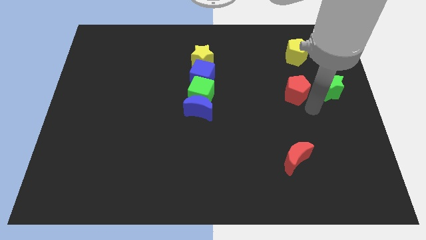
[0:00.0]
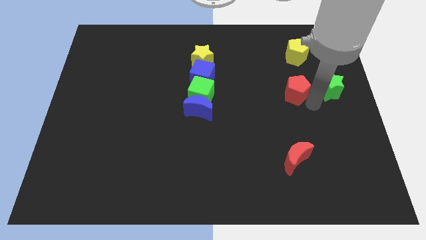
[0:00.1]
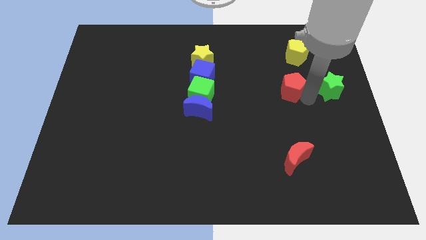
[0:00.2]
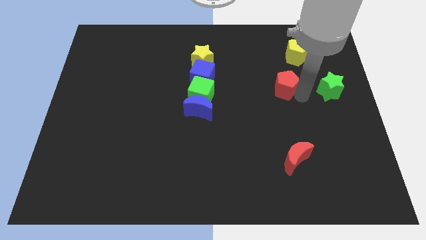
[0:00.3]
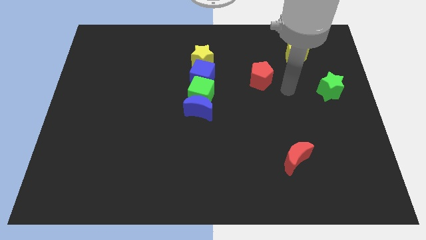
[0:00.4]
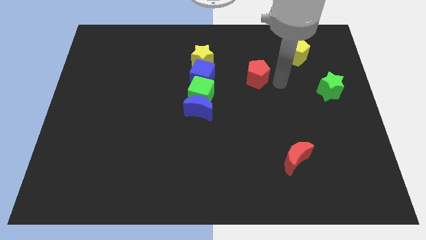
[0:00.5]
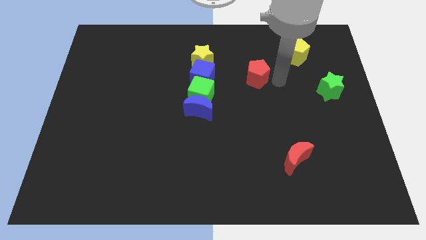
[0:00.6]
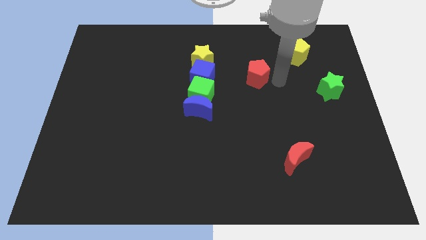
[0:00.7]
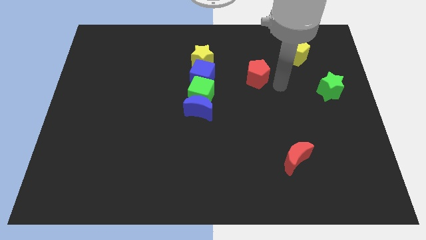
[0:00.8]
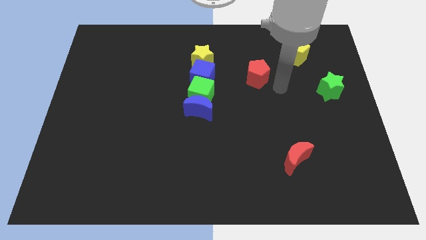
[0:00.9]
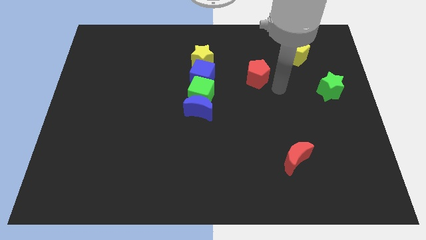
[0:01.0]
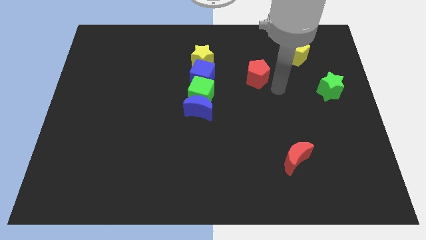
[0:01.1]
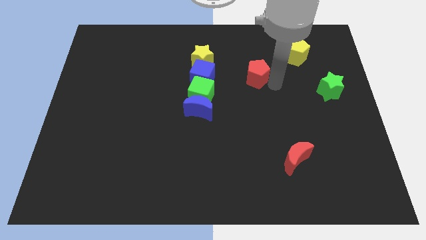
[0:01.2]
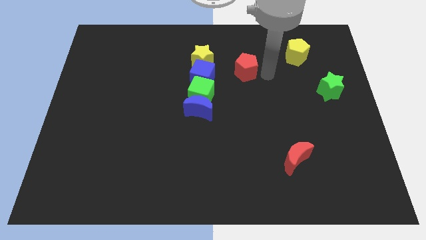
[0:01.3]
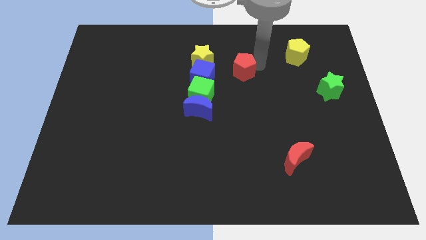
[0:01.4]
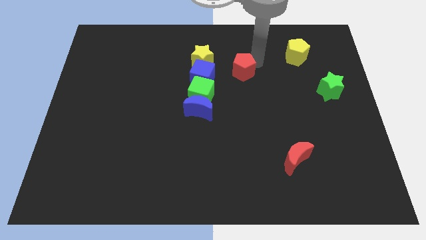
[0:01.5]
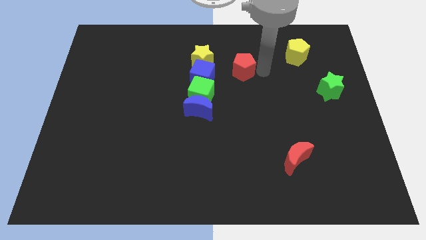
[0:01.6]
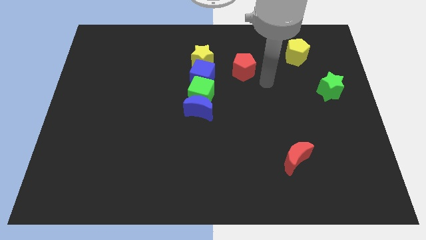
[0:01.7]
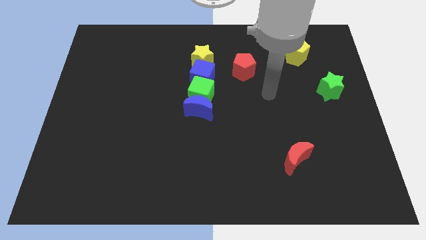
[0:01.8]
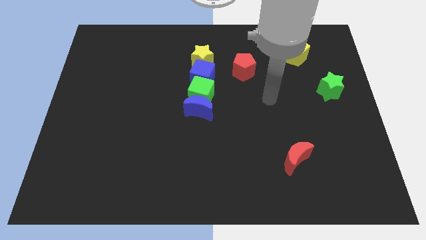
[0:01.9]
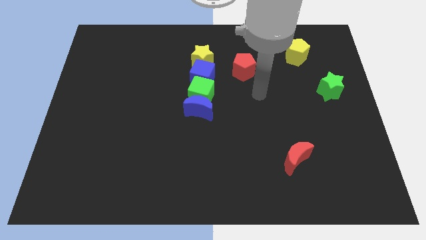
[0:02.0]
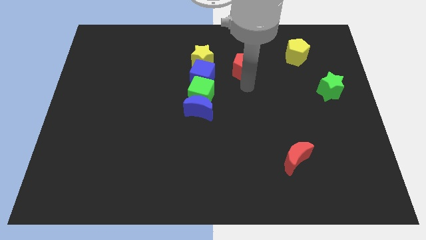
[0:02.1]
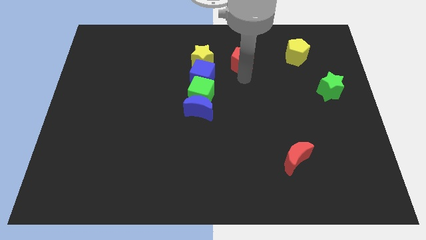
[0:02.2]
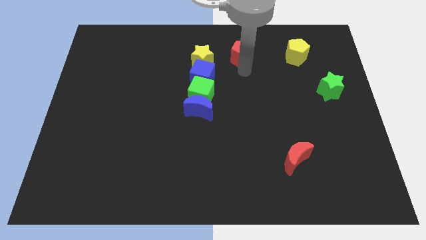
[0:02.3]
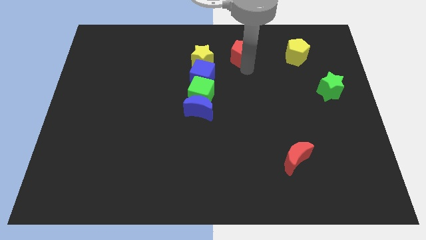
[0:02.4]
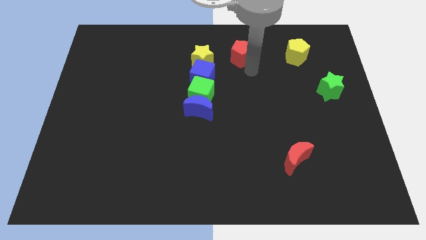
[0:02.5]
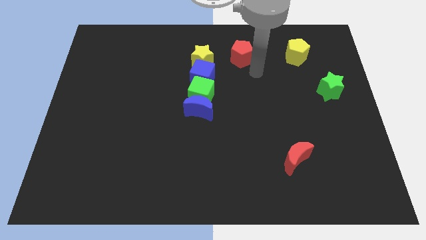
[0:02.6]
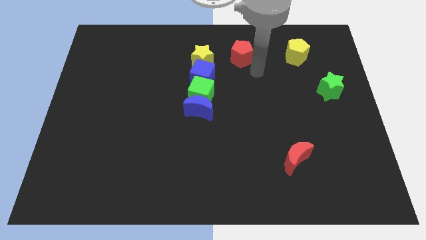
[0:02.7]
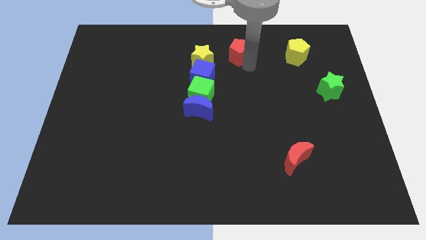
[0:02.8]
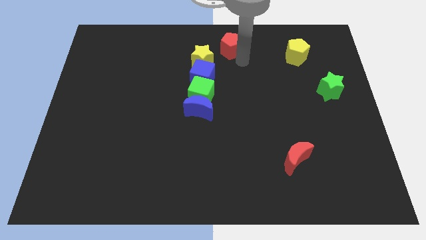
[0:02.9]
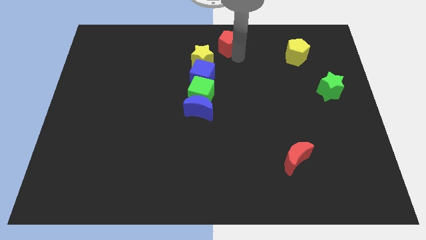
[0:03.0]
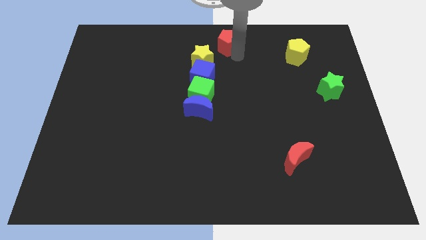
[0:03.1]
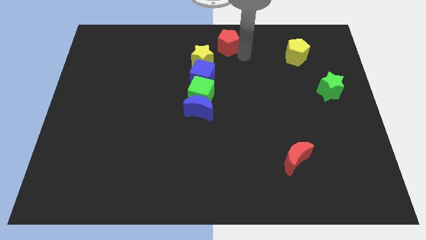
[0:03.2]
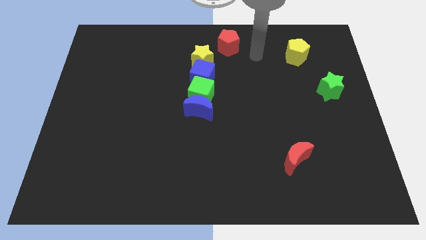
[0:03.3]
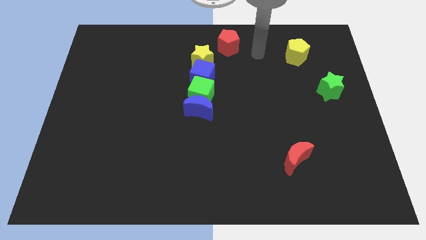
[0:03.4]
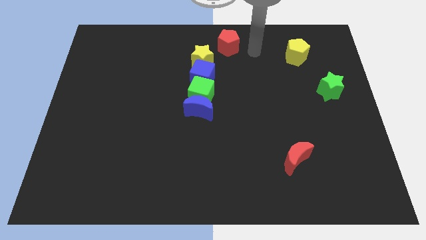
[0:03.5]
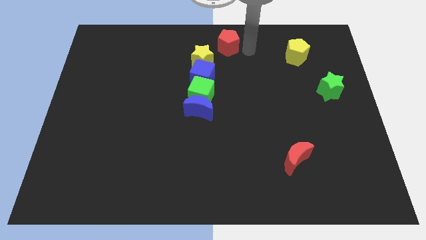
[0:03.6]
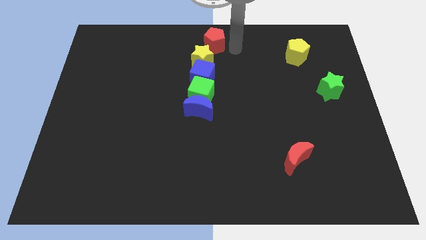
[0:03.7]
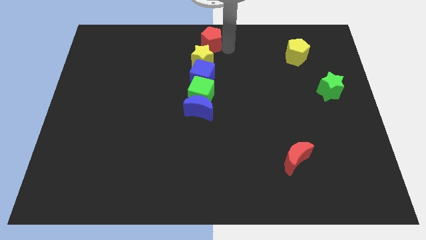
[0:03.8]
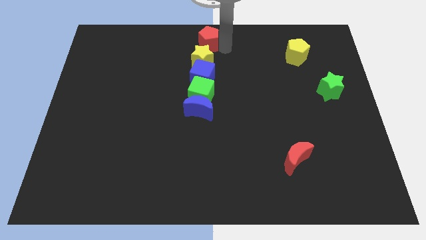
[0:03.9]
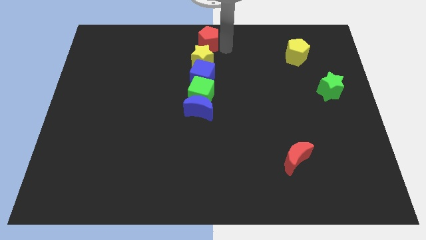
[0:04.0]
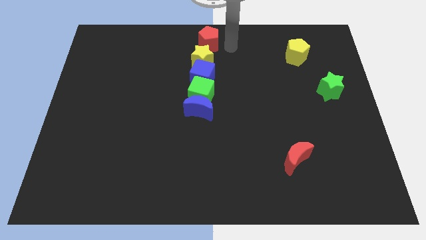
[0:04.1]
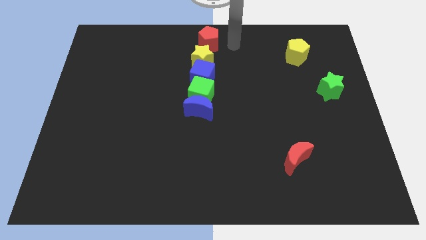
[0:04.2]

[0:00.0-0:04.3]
place the red pentagon above the yellow star

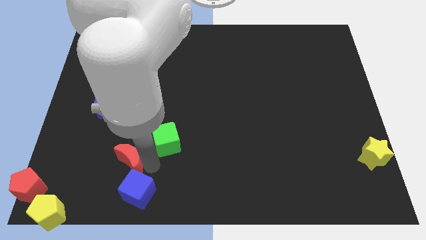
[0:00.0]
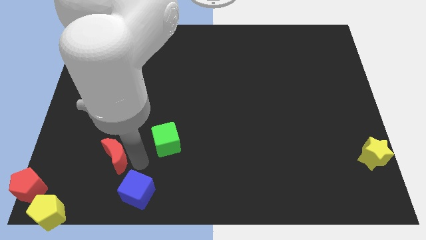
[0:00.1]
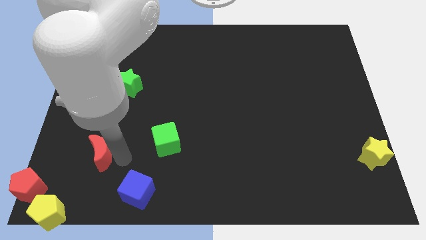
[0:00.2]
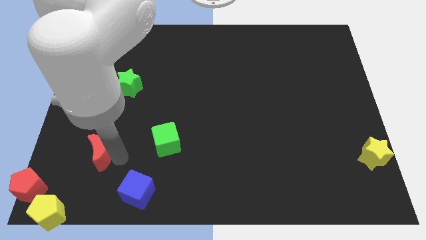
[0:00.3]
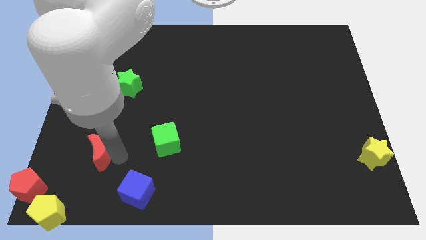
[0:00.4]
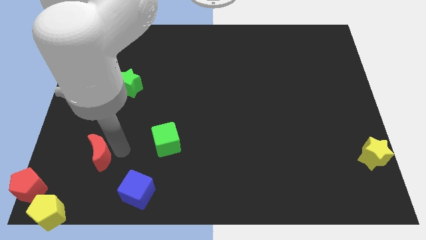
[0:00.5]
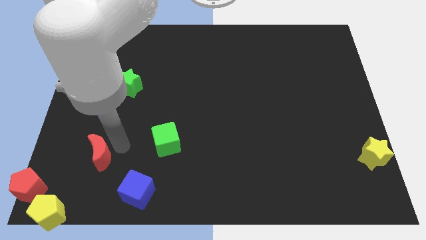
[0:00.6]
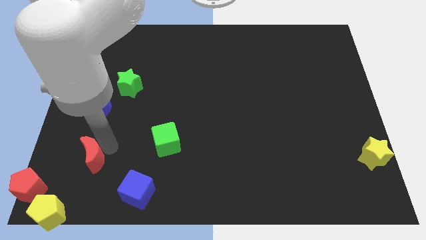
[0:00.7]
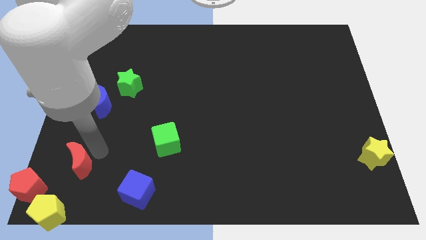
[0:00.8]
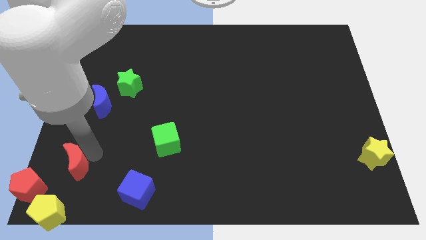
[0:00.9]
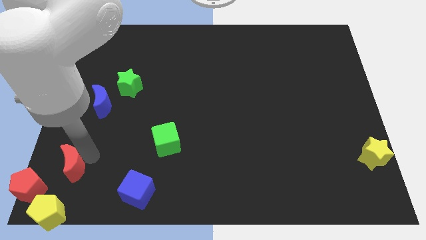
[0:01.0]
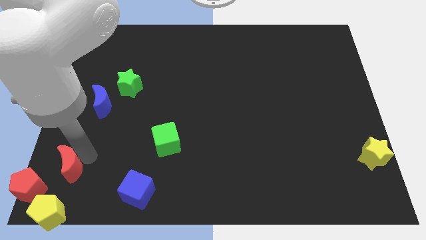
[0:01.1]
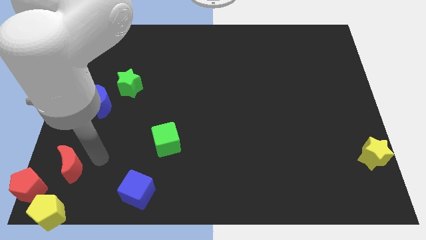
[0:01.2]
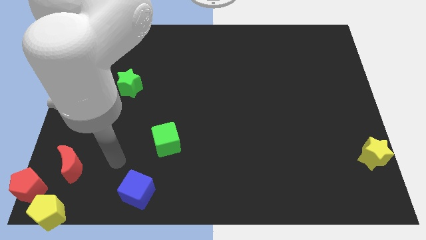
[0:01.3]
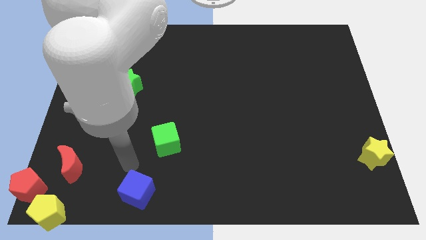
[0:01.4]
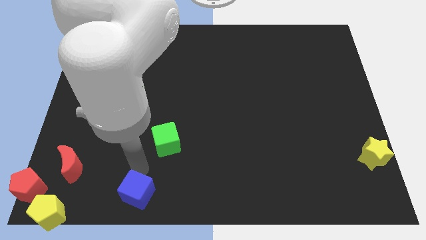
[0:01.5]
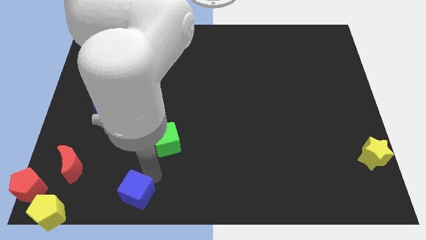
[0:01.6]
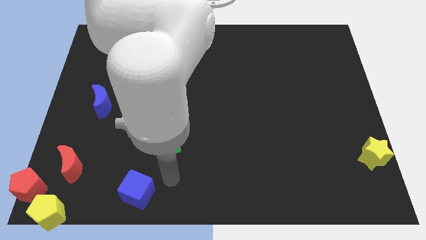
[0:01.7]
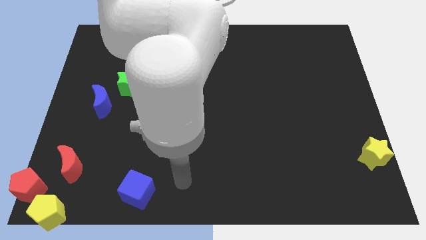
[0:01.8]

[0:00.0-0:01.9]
push red crescent towards the bottom left corner side

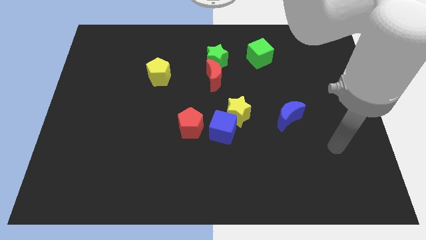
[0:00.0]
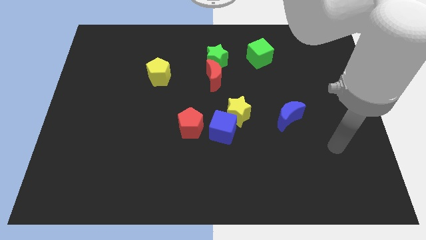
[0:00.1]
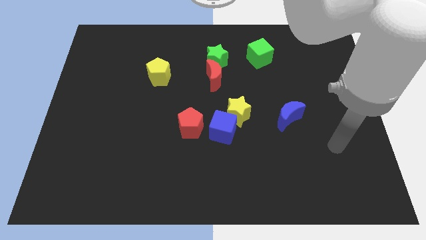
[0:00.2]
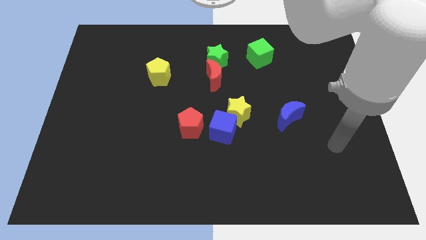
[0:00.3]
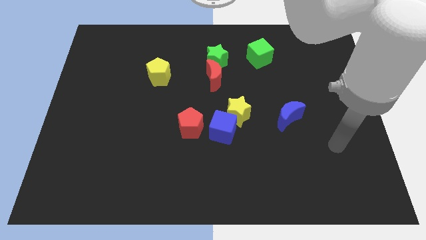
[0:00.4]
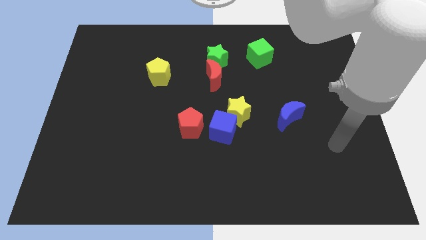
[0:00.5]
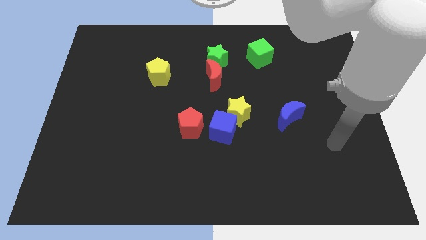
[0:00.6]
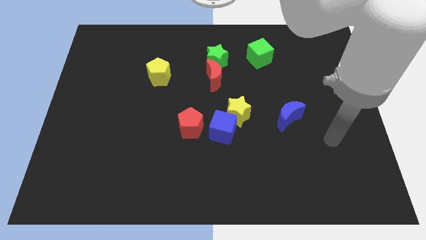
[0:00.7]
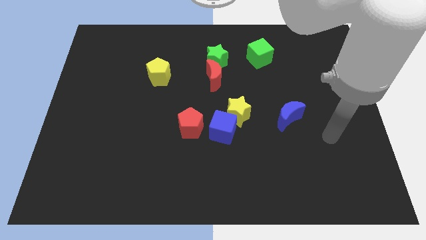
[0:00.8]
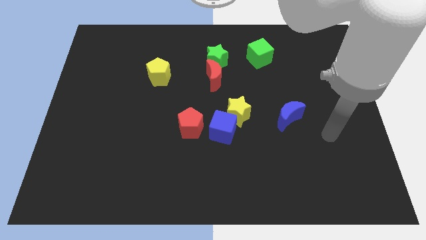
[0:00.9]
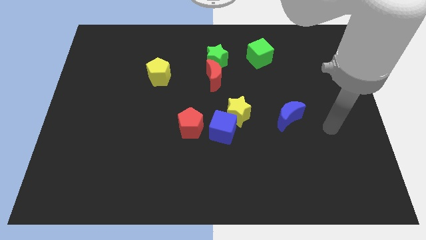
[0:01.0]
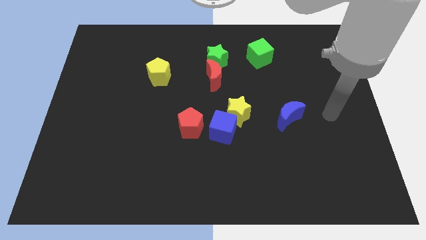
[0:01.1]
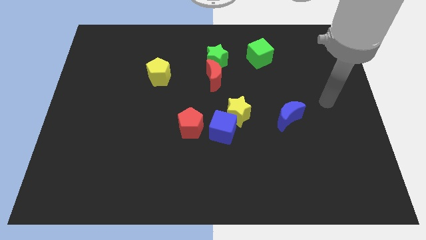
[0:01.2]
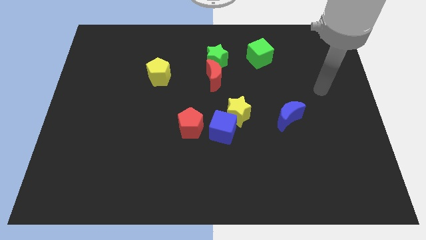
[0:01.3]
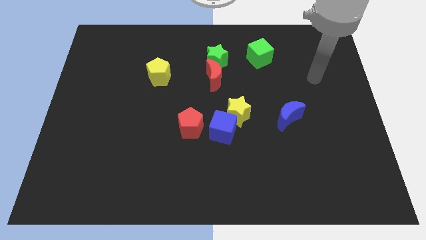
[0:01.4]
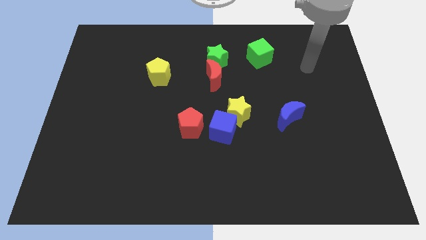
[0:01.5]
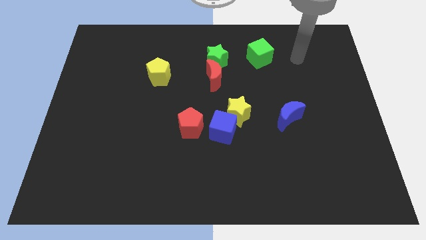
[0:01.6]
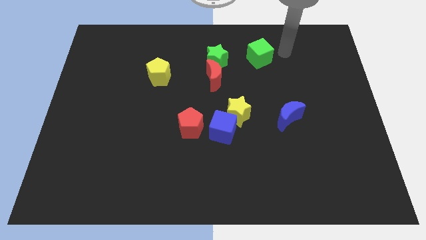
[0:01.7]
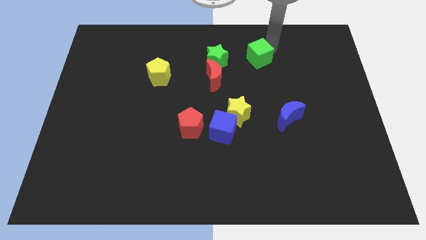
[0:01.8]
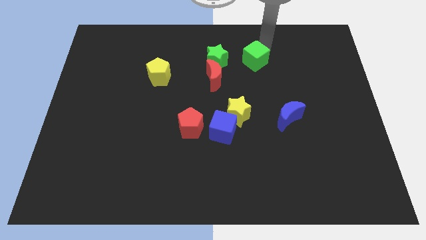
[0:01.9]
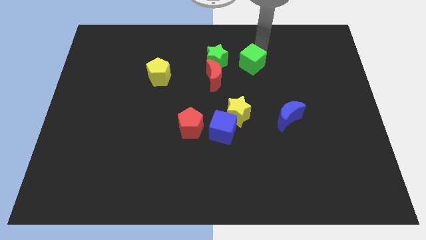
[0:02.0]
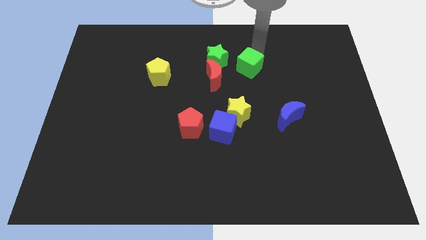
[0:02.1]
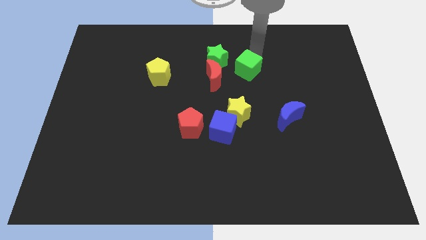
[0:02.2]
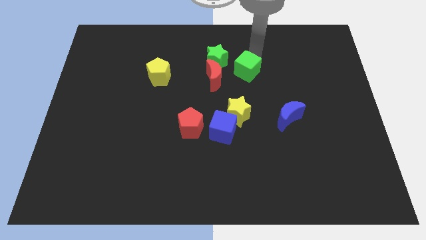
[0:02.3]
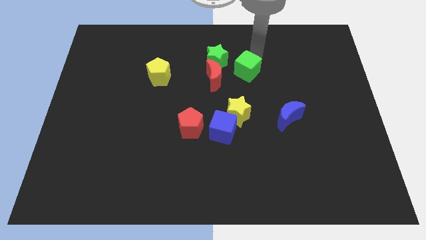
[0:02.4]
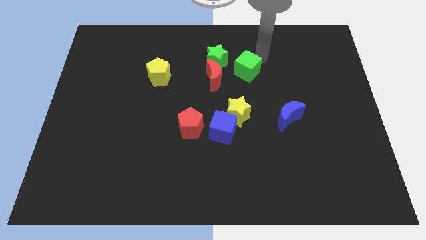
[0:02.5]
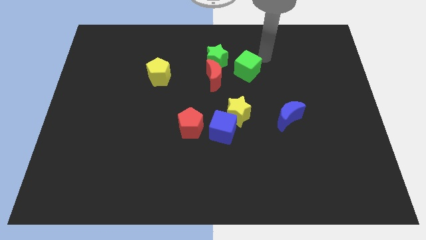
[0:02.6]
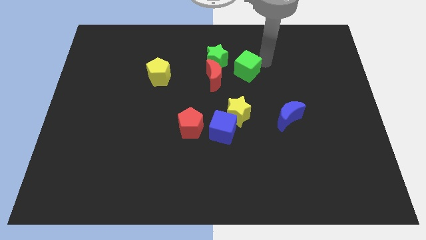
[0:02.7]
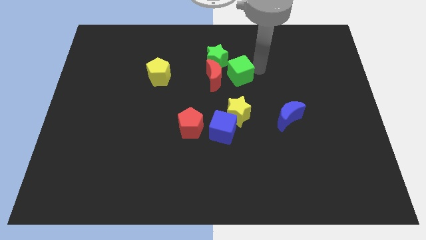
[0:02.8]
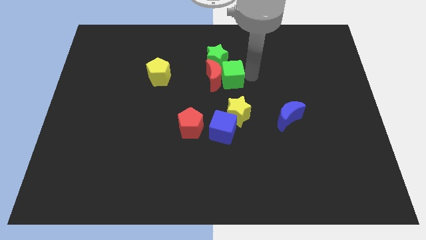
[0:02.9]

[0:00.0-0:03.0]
push the green cube to the right of the red crescent
